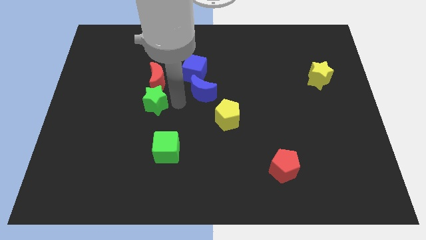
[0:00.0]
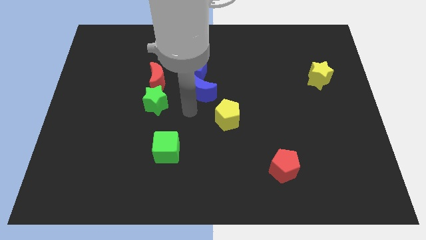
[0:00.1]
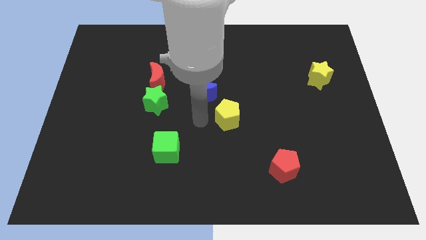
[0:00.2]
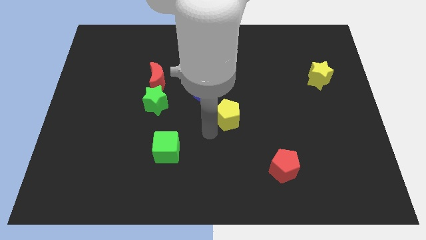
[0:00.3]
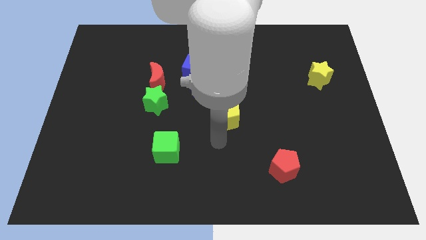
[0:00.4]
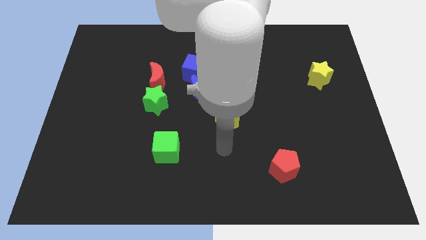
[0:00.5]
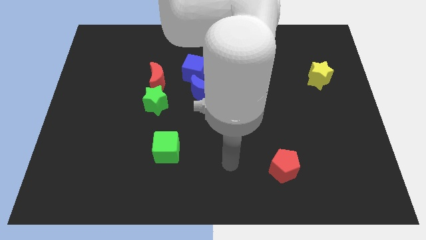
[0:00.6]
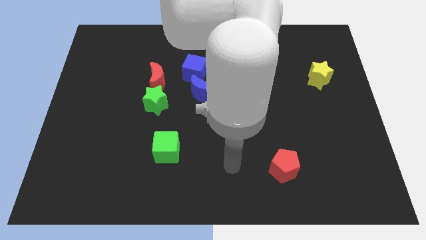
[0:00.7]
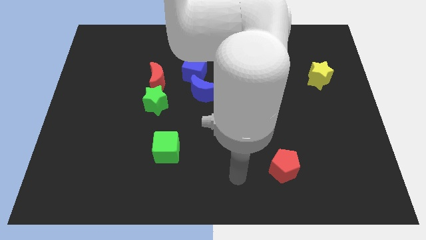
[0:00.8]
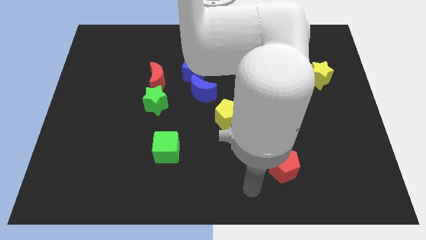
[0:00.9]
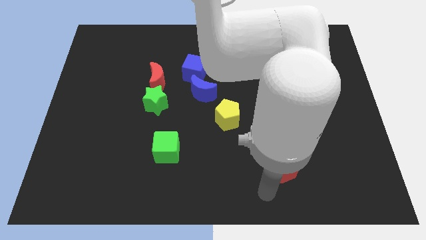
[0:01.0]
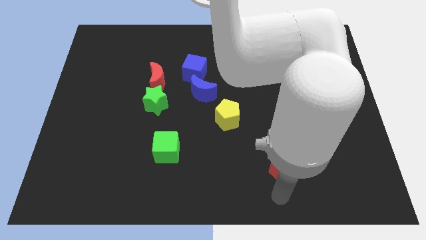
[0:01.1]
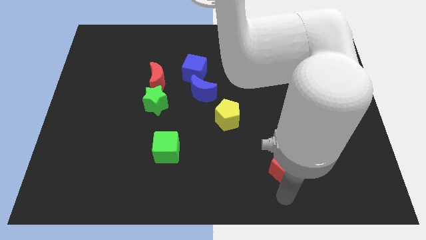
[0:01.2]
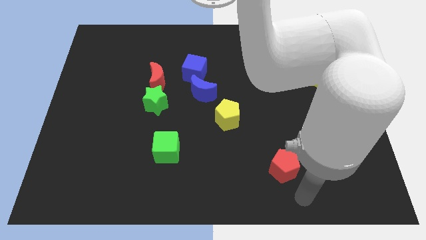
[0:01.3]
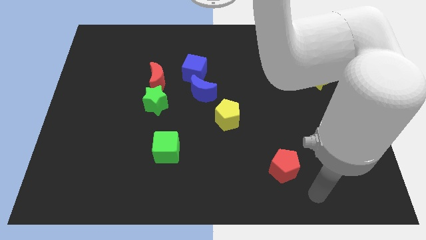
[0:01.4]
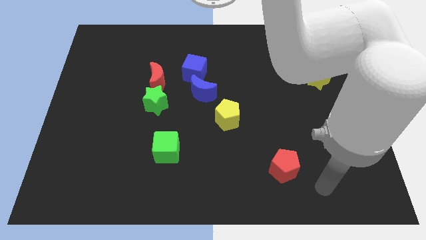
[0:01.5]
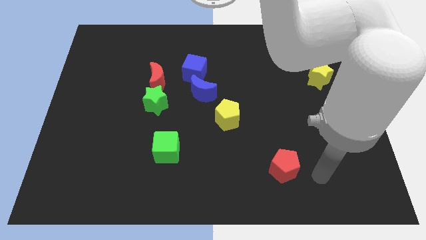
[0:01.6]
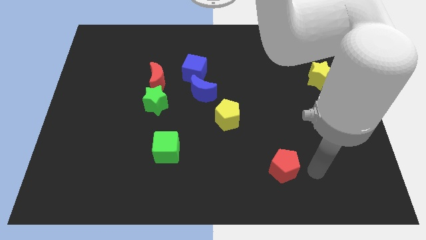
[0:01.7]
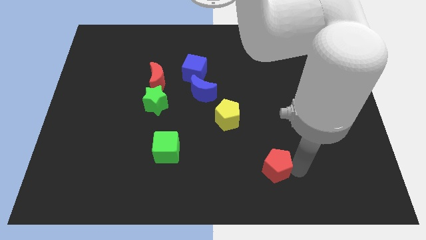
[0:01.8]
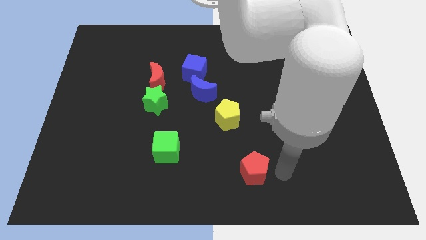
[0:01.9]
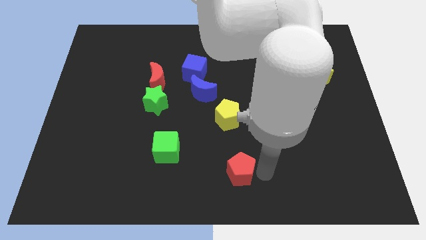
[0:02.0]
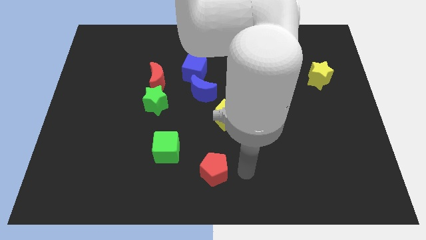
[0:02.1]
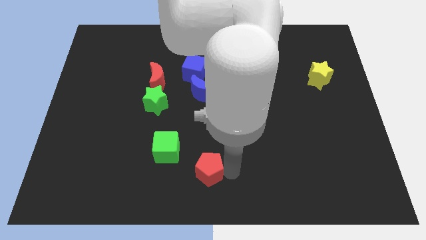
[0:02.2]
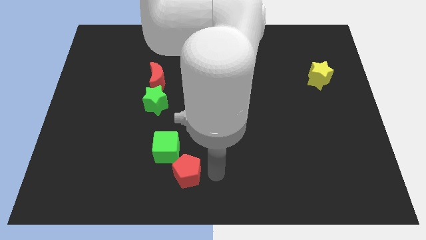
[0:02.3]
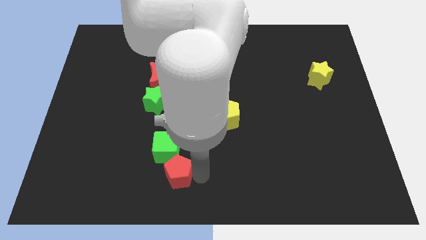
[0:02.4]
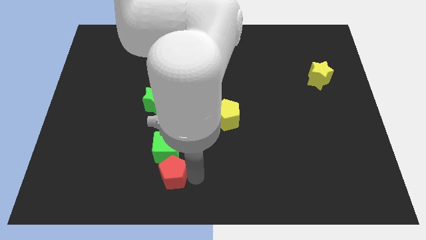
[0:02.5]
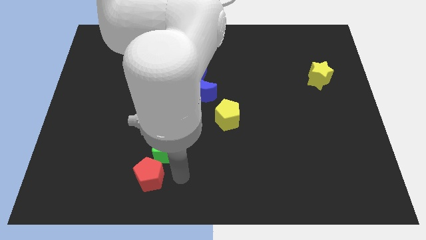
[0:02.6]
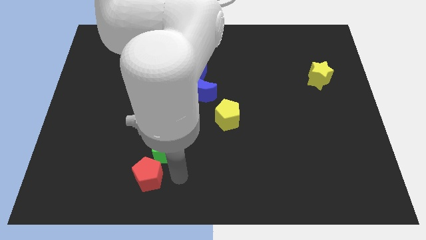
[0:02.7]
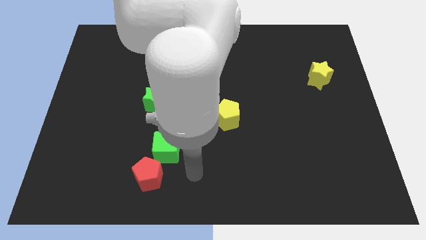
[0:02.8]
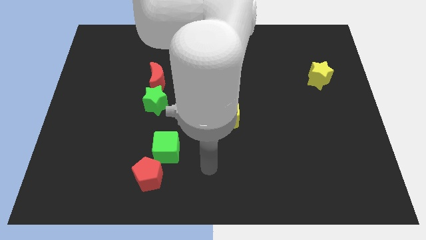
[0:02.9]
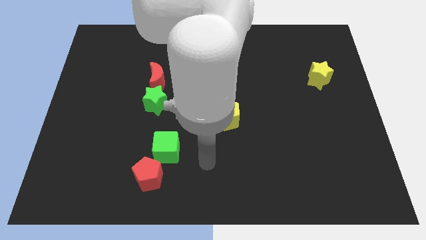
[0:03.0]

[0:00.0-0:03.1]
place the red pentagon below the green cube

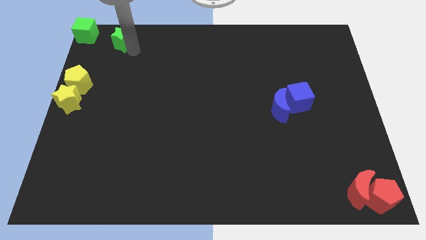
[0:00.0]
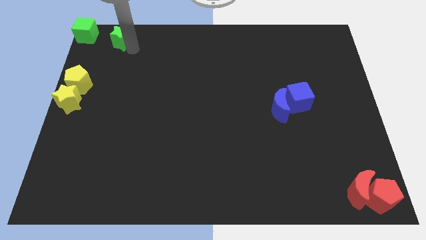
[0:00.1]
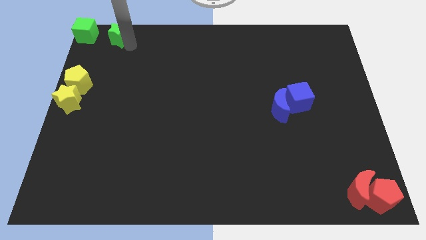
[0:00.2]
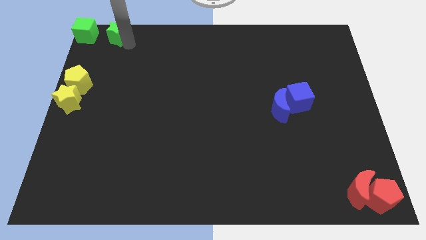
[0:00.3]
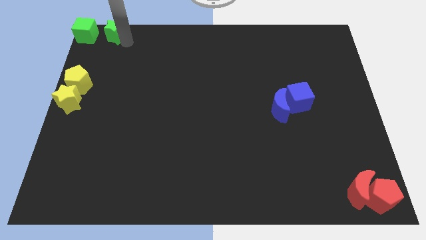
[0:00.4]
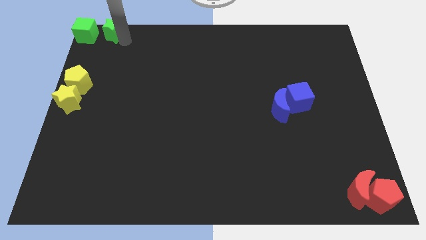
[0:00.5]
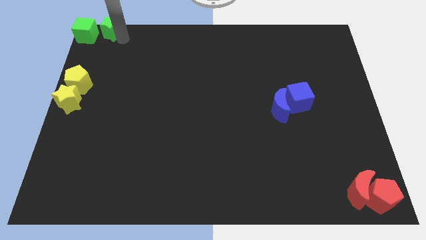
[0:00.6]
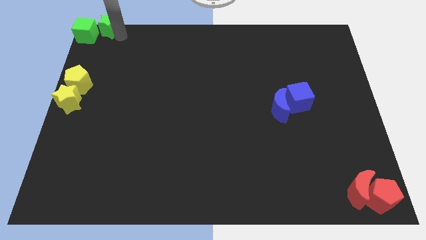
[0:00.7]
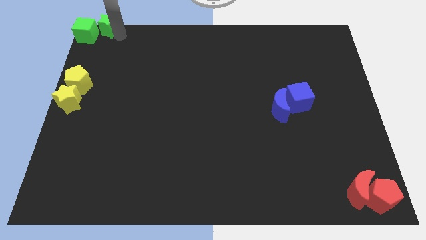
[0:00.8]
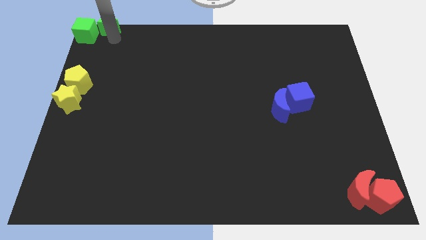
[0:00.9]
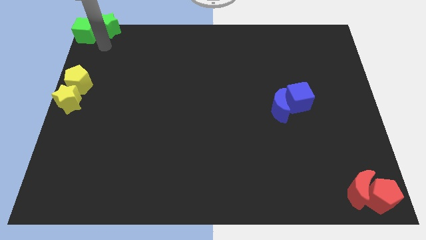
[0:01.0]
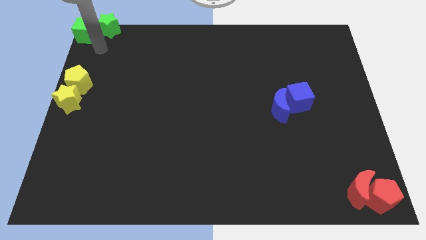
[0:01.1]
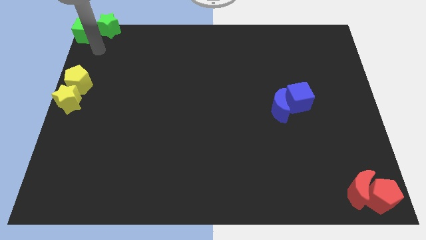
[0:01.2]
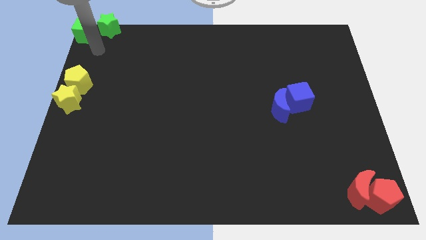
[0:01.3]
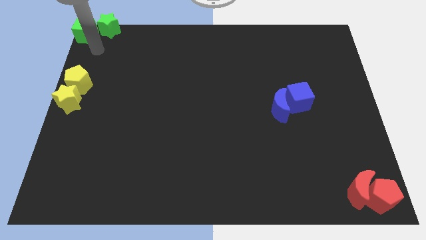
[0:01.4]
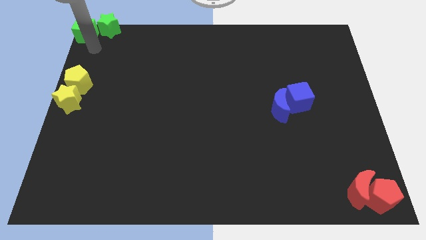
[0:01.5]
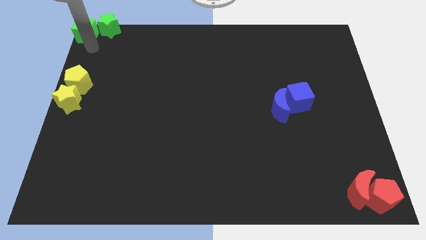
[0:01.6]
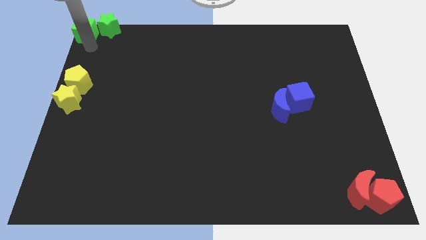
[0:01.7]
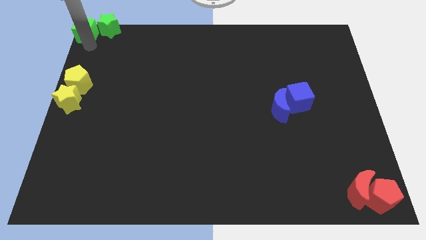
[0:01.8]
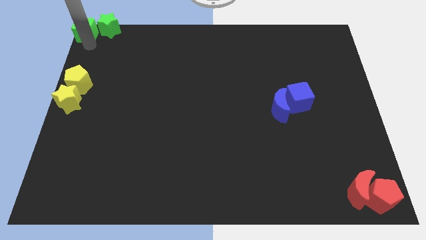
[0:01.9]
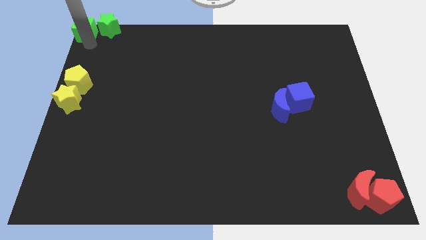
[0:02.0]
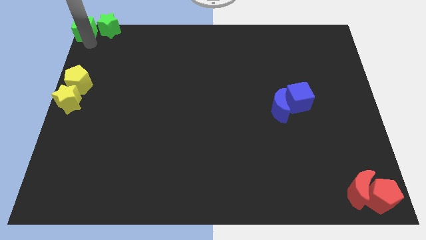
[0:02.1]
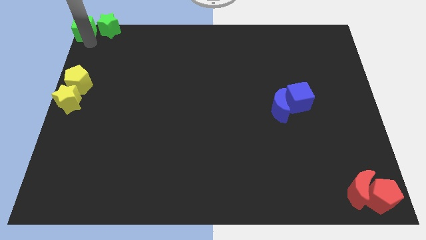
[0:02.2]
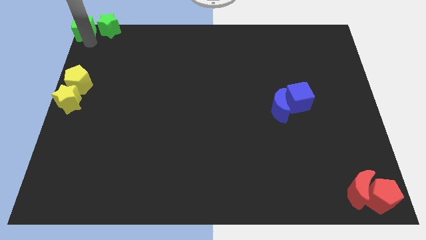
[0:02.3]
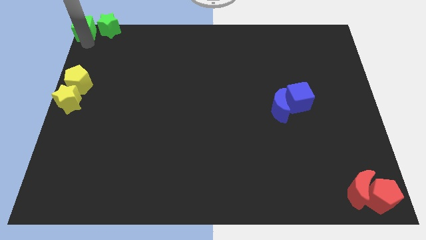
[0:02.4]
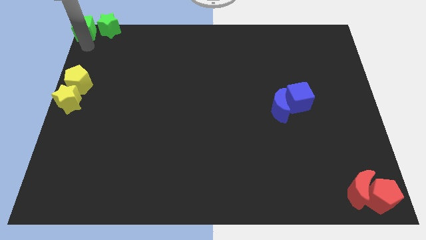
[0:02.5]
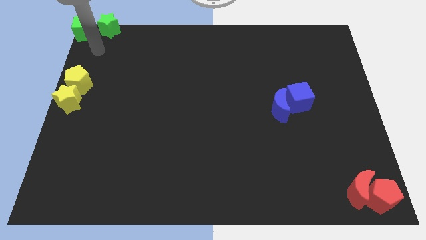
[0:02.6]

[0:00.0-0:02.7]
place the group of green blocks together at the top left corner

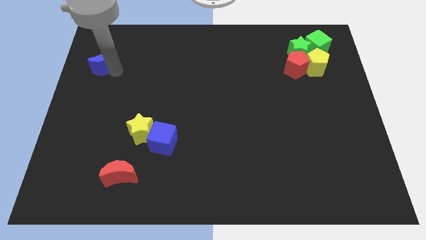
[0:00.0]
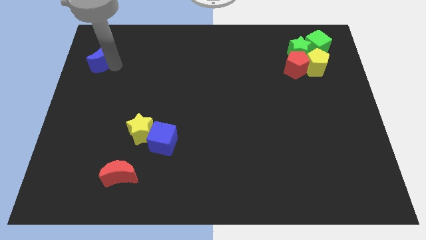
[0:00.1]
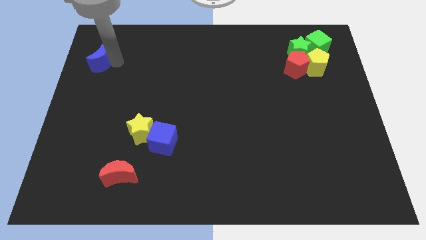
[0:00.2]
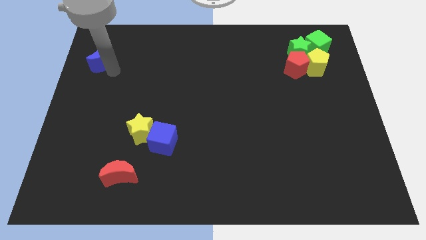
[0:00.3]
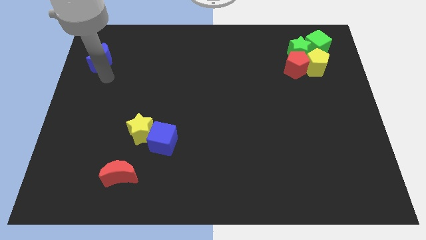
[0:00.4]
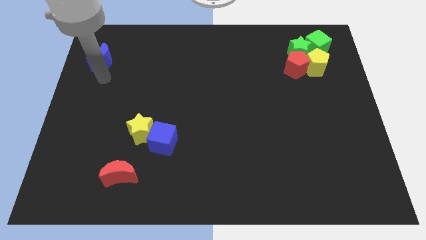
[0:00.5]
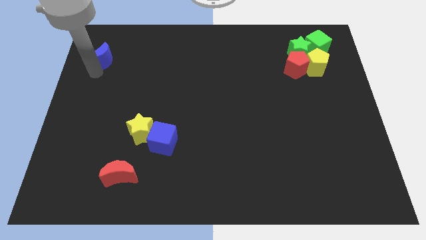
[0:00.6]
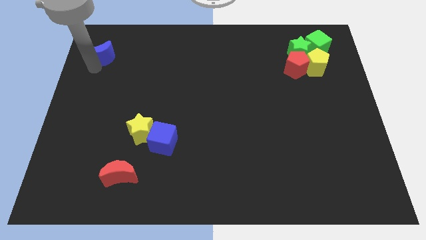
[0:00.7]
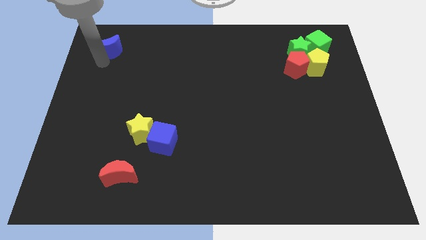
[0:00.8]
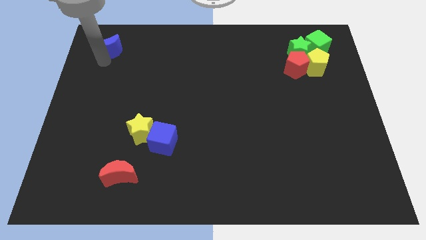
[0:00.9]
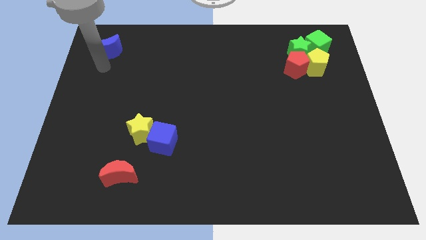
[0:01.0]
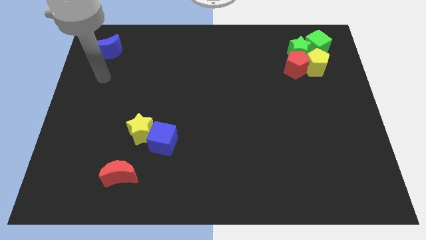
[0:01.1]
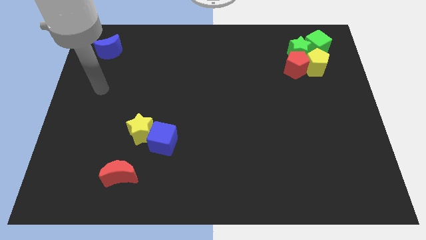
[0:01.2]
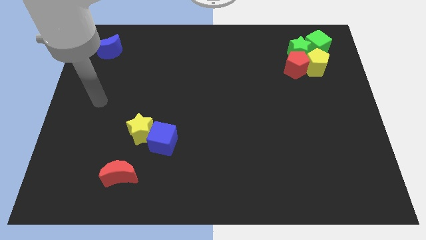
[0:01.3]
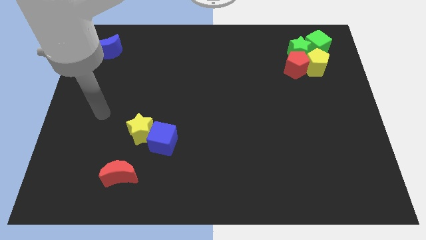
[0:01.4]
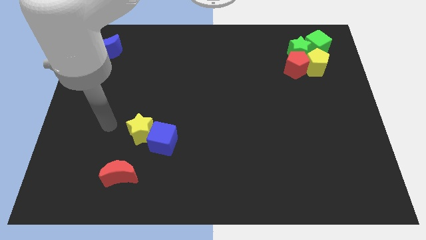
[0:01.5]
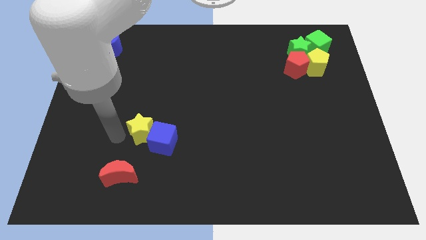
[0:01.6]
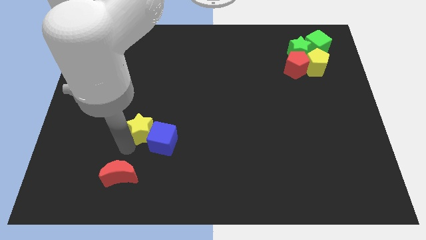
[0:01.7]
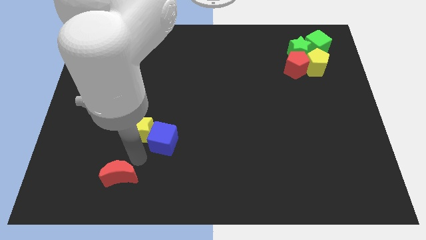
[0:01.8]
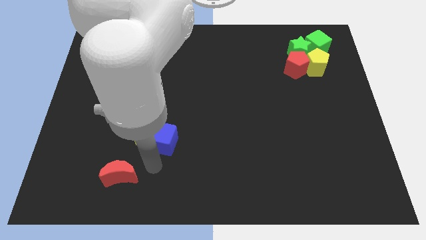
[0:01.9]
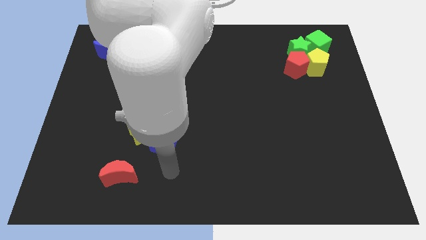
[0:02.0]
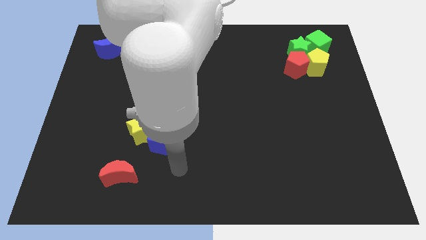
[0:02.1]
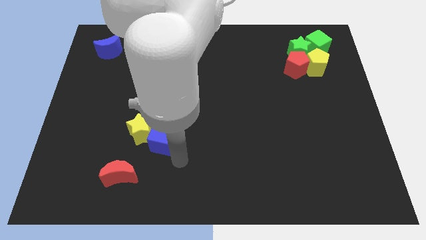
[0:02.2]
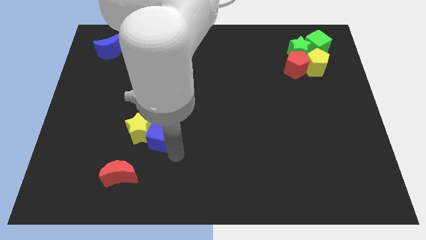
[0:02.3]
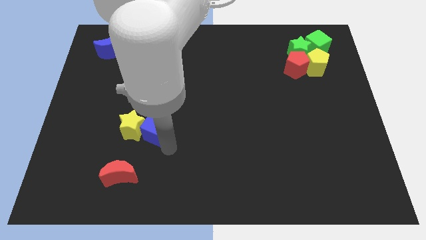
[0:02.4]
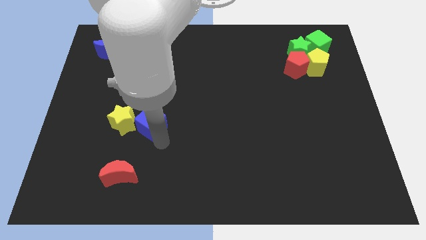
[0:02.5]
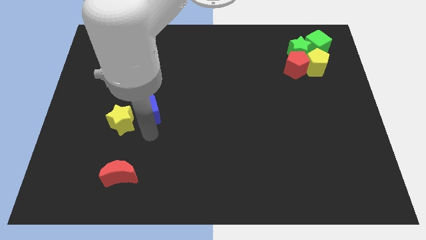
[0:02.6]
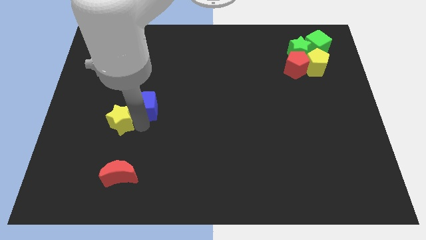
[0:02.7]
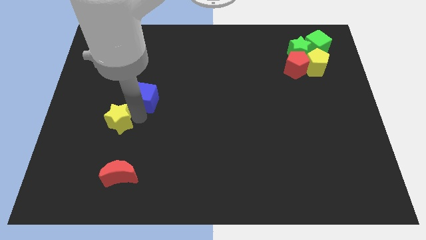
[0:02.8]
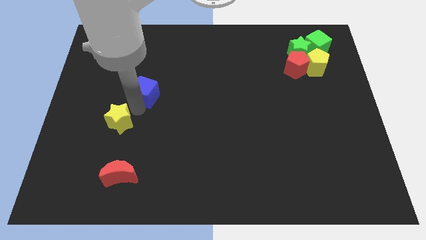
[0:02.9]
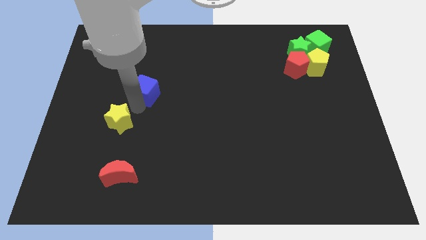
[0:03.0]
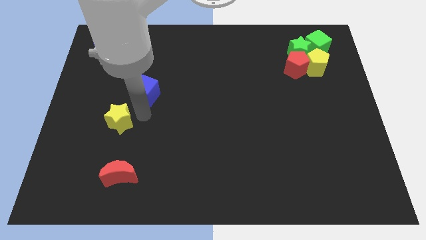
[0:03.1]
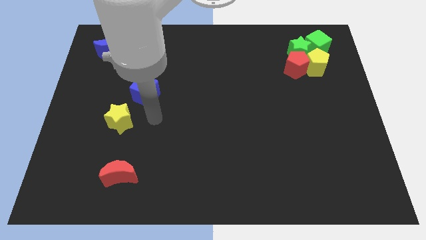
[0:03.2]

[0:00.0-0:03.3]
separate the blue cube with yellow star
